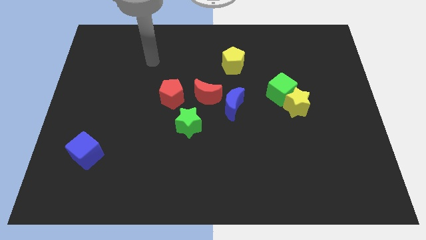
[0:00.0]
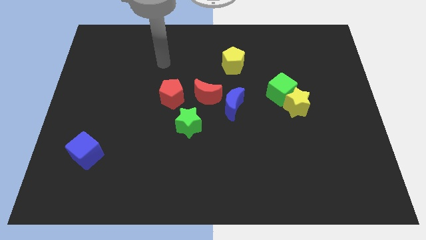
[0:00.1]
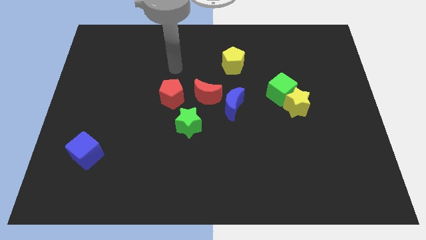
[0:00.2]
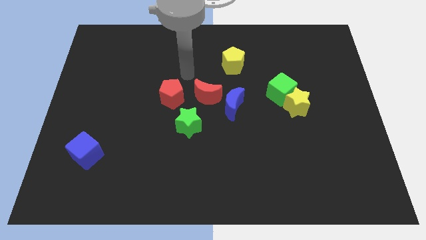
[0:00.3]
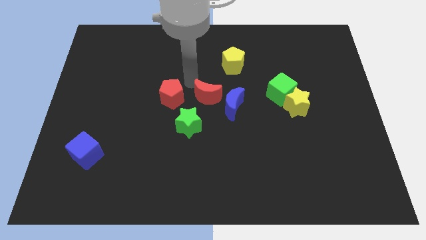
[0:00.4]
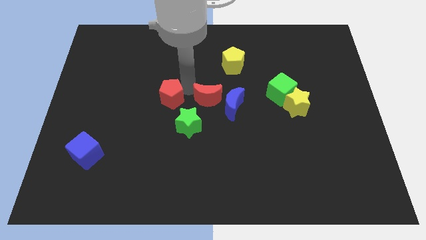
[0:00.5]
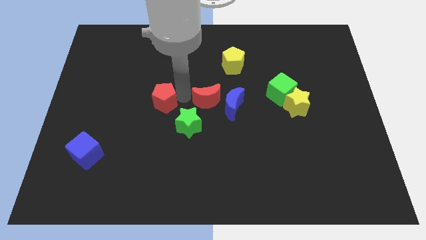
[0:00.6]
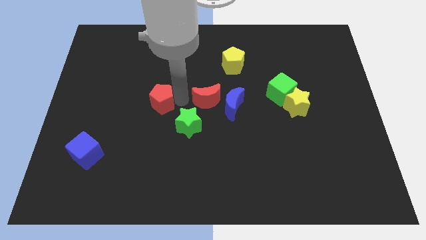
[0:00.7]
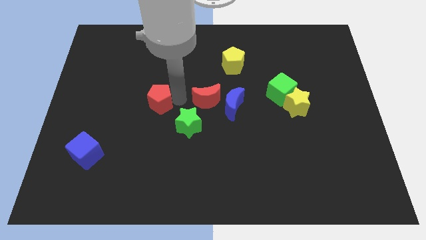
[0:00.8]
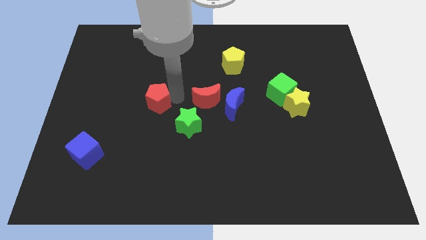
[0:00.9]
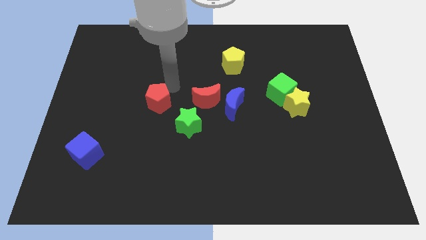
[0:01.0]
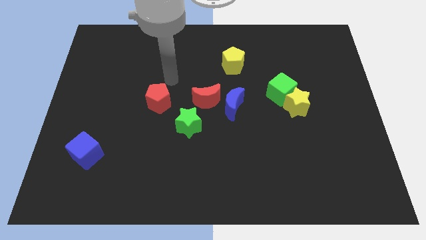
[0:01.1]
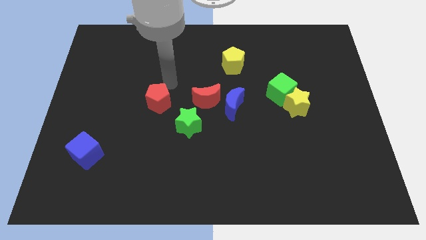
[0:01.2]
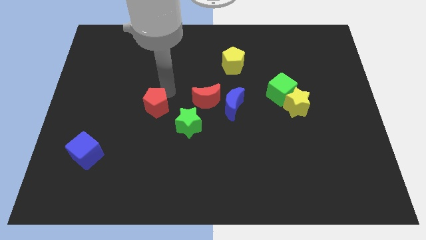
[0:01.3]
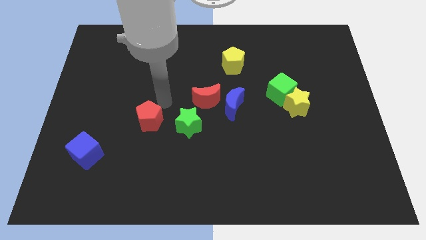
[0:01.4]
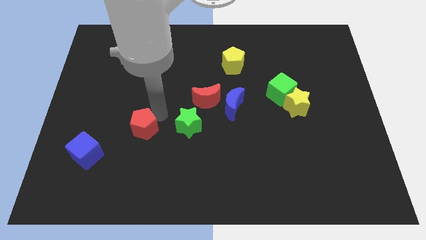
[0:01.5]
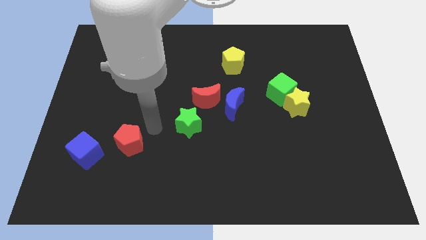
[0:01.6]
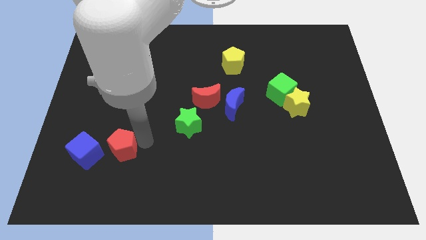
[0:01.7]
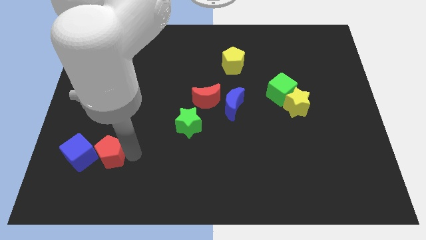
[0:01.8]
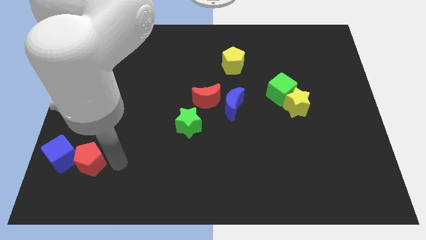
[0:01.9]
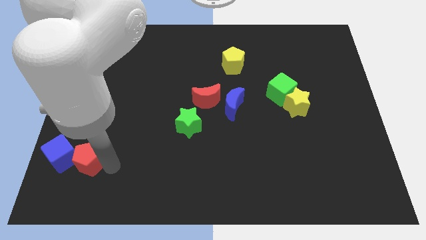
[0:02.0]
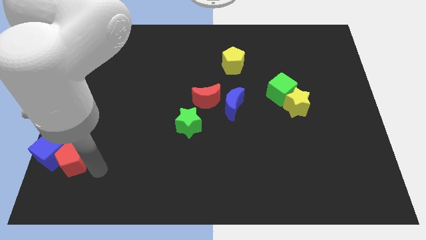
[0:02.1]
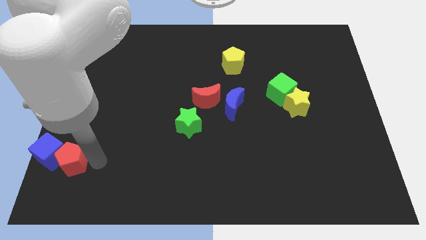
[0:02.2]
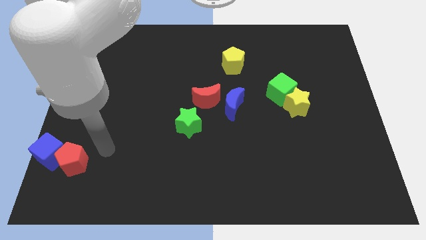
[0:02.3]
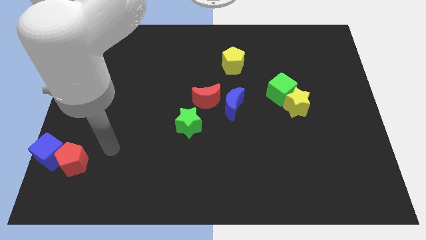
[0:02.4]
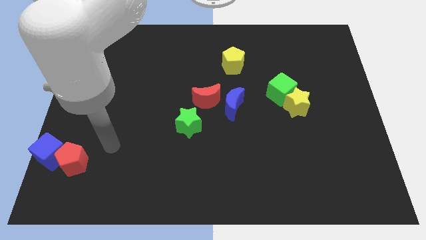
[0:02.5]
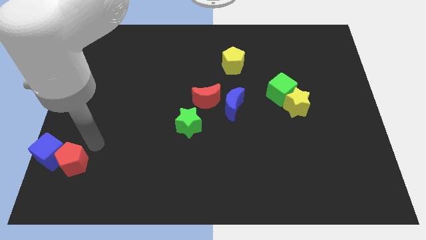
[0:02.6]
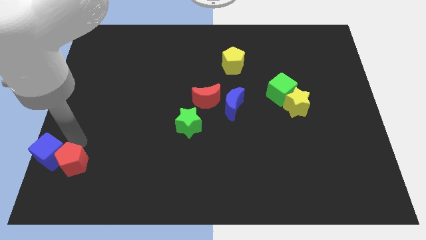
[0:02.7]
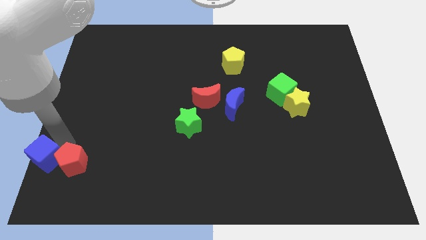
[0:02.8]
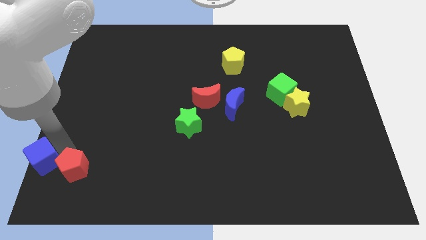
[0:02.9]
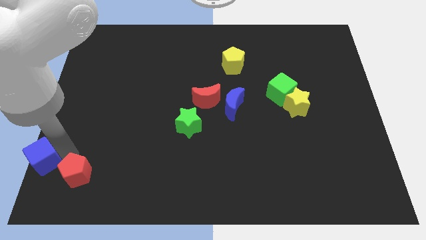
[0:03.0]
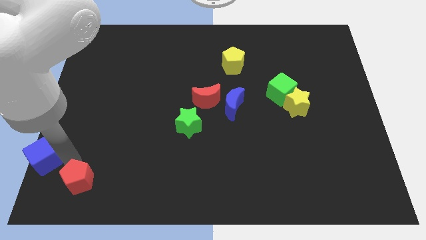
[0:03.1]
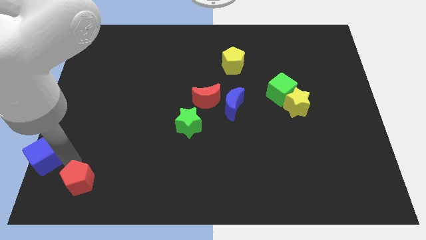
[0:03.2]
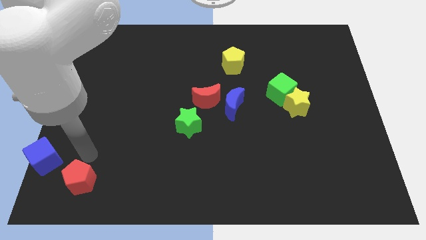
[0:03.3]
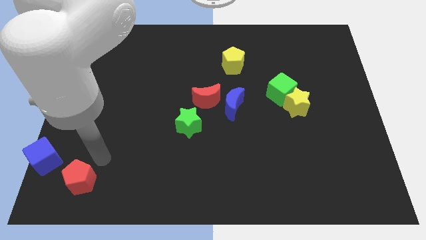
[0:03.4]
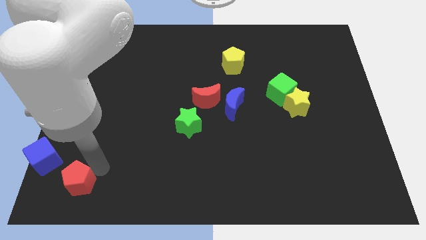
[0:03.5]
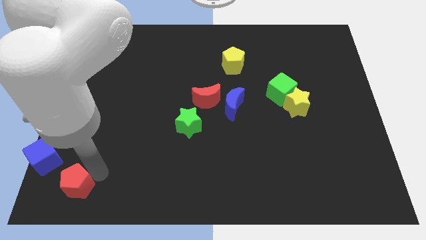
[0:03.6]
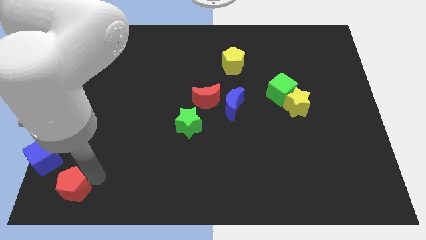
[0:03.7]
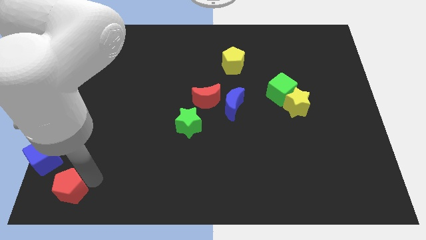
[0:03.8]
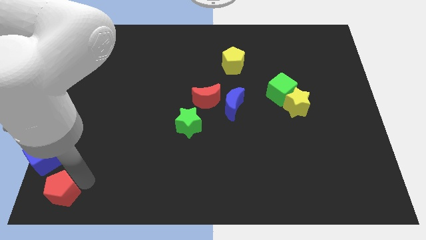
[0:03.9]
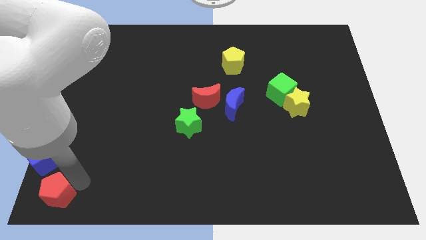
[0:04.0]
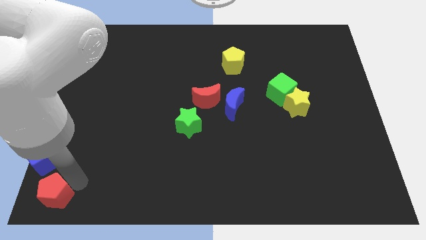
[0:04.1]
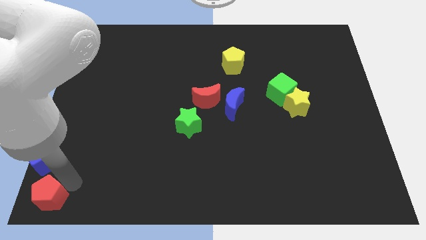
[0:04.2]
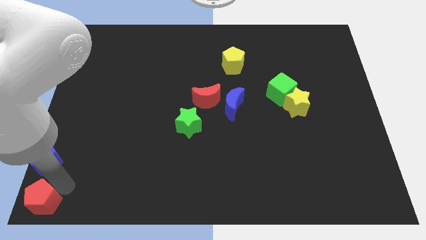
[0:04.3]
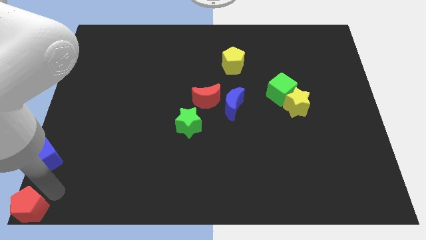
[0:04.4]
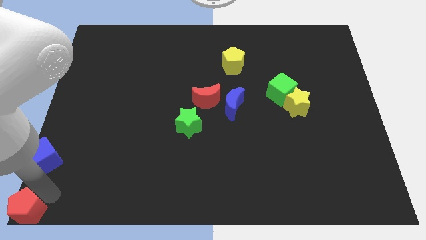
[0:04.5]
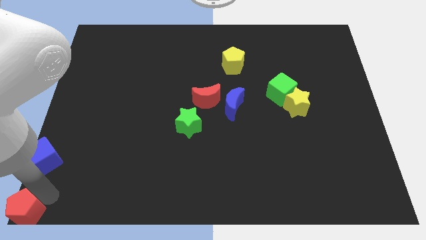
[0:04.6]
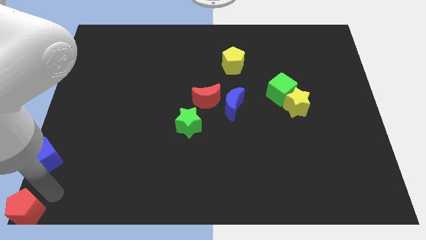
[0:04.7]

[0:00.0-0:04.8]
push the red pentagon to the bottom left corner of the board

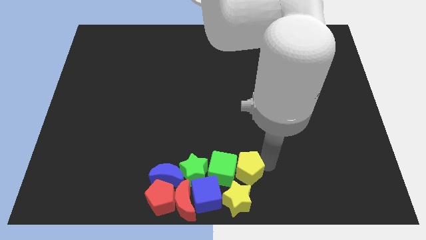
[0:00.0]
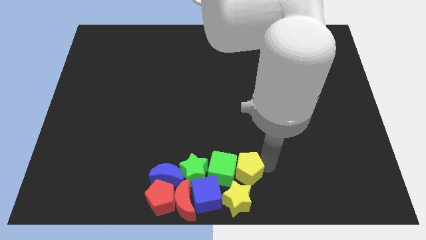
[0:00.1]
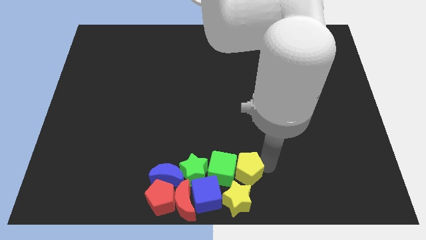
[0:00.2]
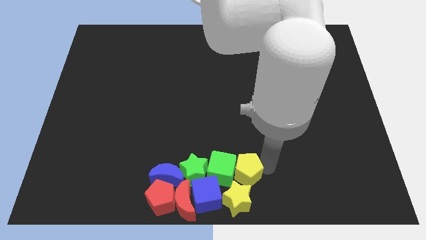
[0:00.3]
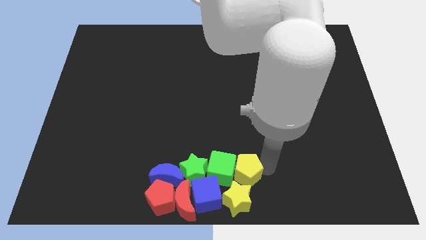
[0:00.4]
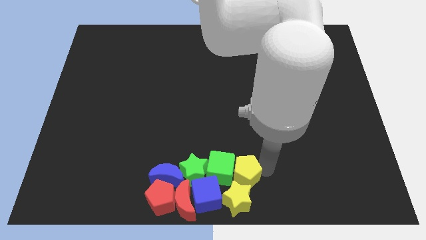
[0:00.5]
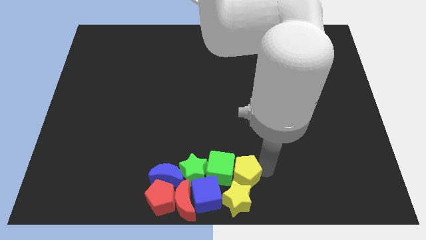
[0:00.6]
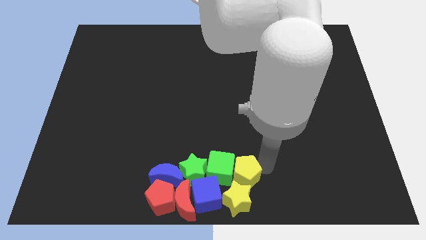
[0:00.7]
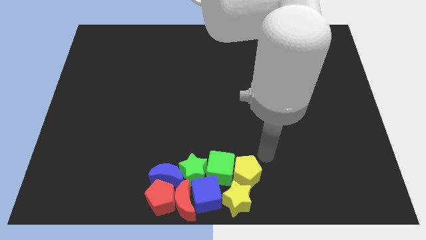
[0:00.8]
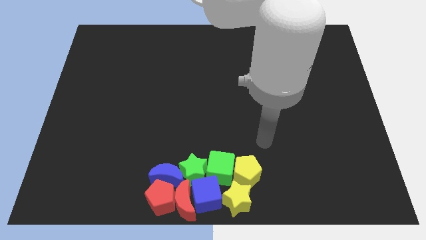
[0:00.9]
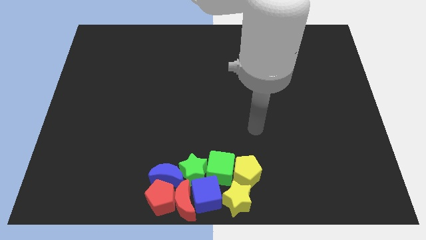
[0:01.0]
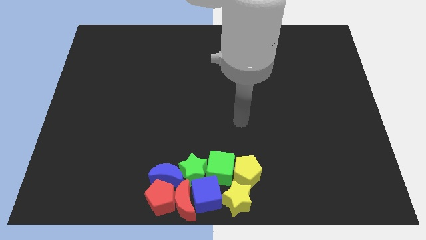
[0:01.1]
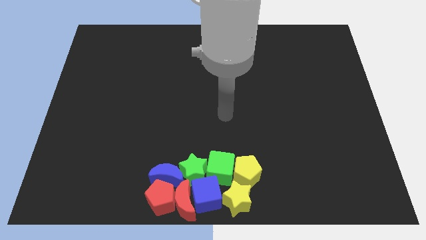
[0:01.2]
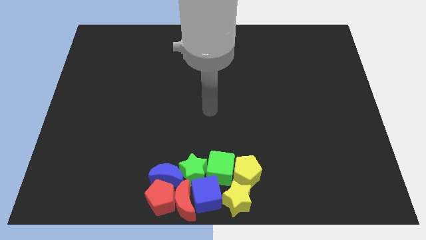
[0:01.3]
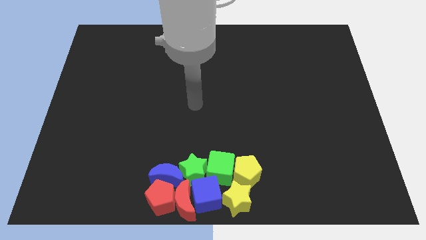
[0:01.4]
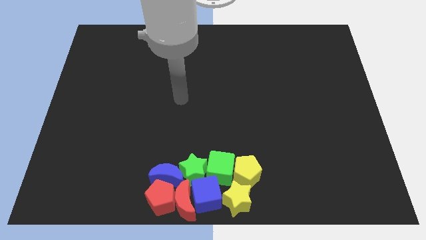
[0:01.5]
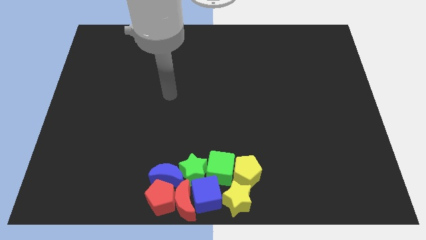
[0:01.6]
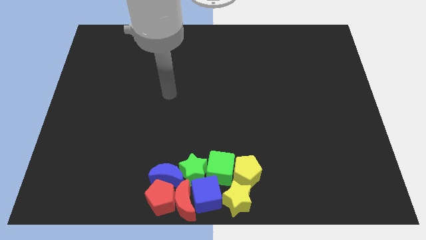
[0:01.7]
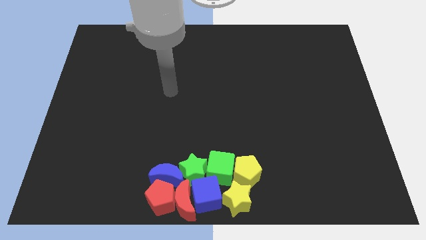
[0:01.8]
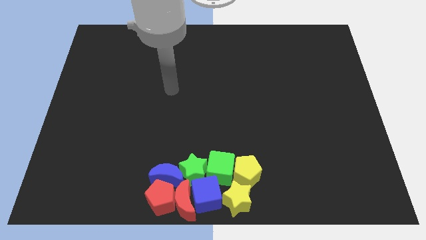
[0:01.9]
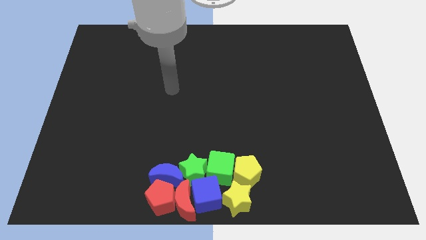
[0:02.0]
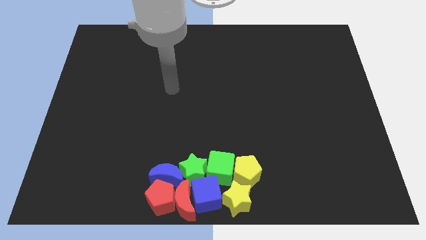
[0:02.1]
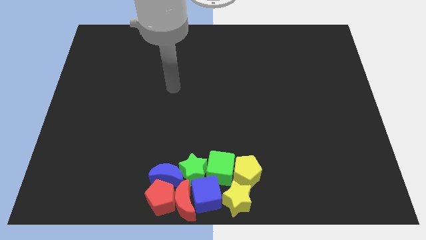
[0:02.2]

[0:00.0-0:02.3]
place yellow pentagon above the yellow star

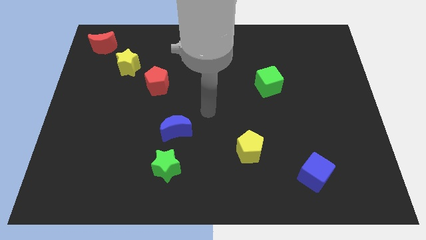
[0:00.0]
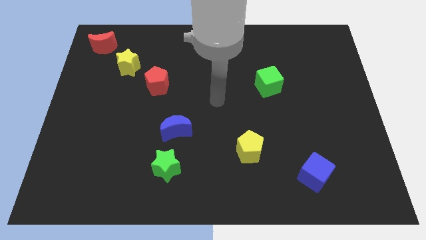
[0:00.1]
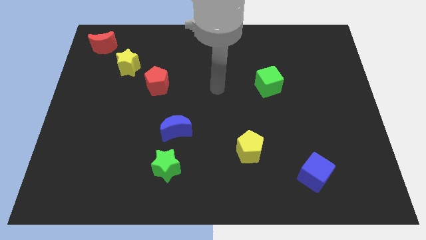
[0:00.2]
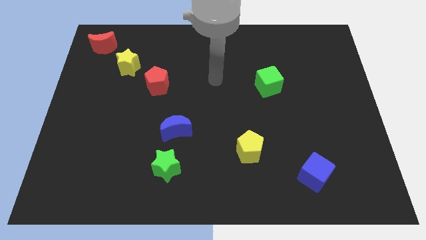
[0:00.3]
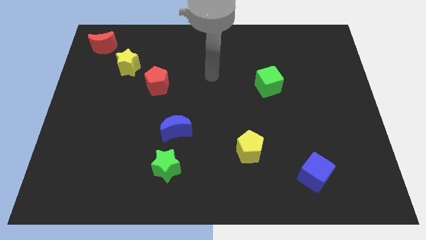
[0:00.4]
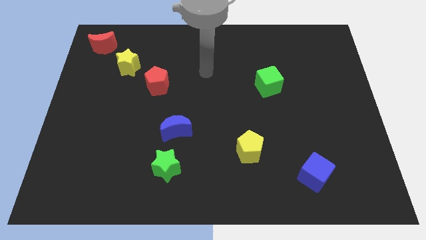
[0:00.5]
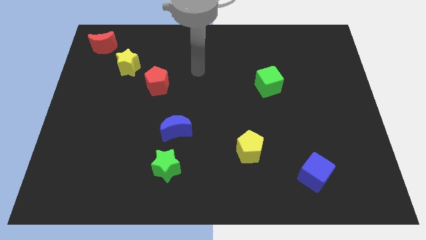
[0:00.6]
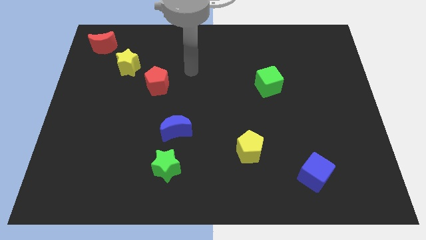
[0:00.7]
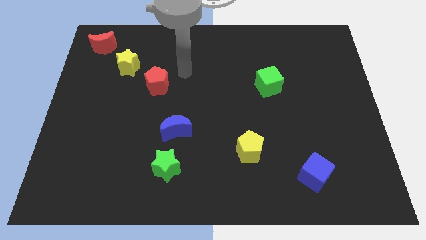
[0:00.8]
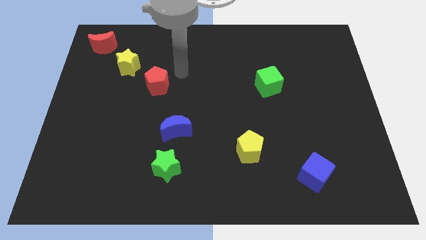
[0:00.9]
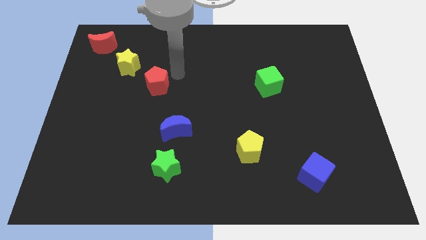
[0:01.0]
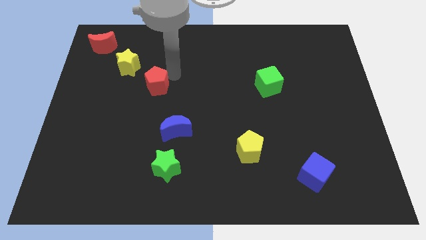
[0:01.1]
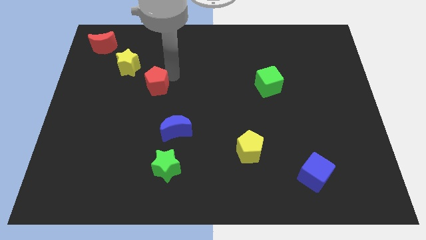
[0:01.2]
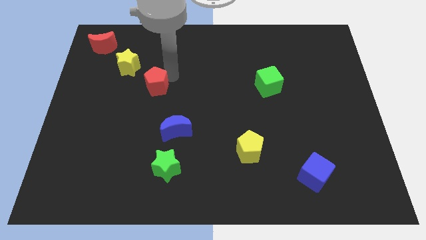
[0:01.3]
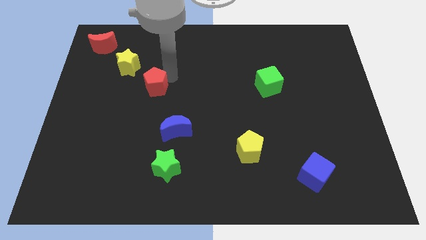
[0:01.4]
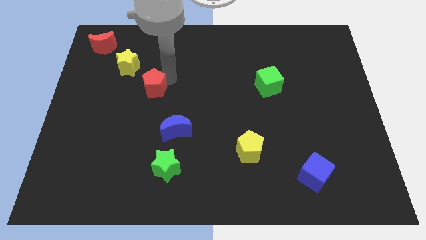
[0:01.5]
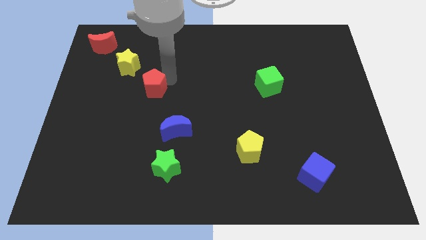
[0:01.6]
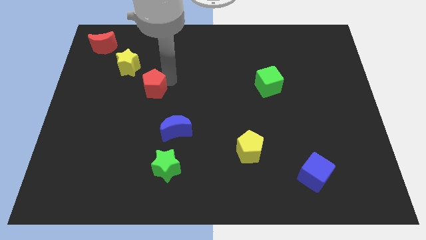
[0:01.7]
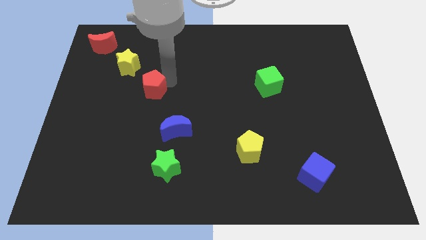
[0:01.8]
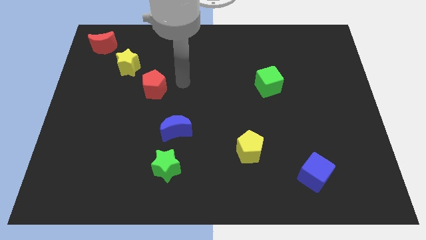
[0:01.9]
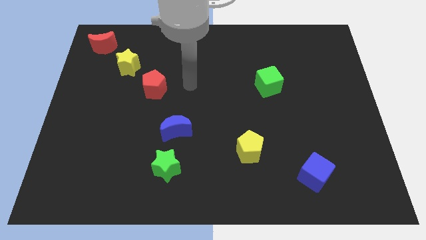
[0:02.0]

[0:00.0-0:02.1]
move red pentagon slightly down
